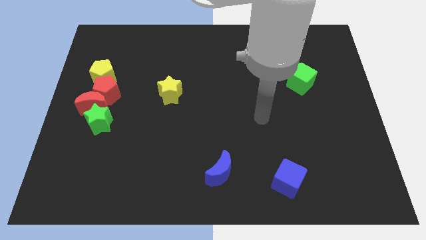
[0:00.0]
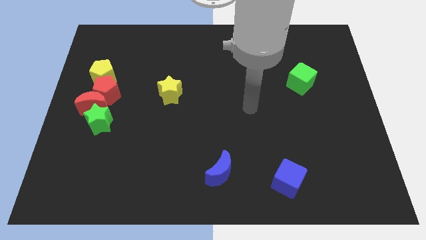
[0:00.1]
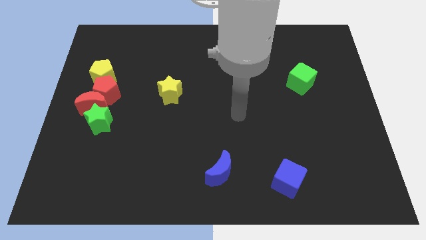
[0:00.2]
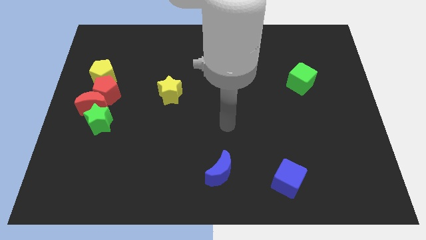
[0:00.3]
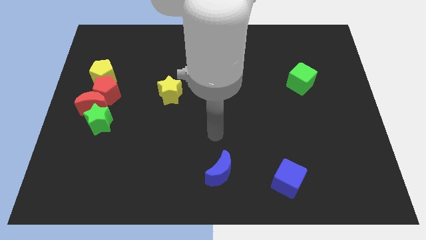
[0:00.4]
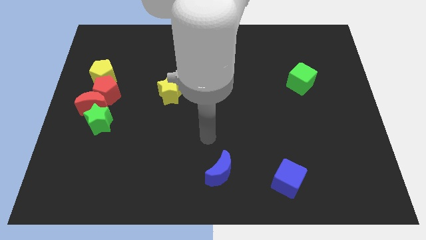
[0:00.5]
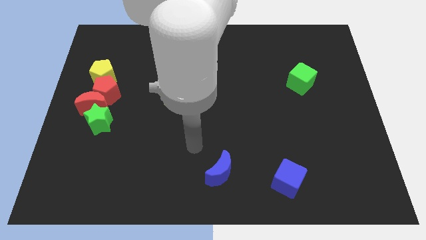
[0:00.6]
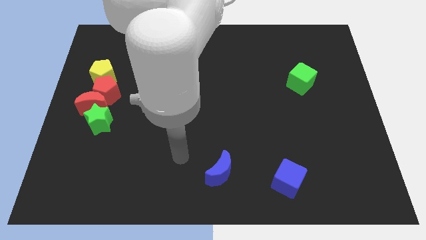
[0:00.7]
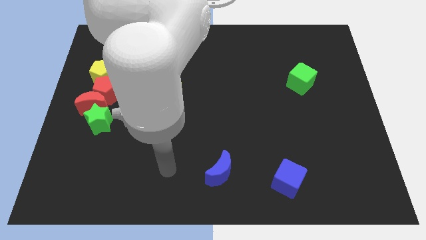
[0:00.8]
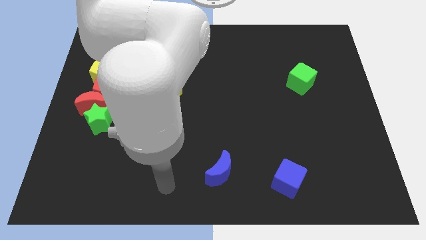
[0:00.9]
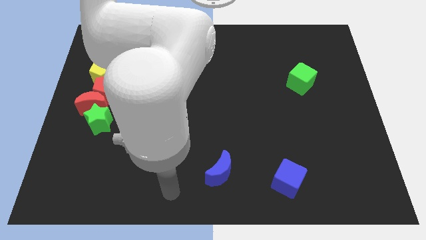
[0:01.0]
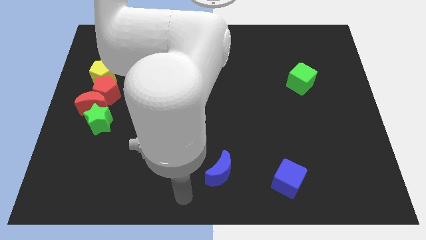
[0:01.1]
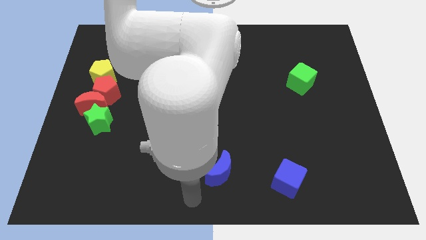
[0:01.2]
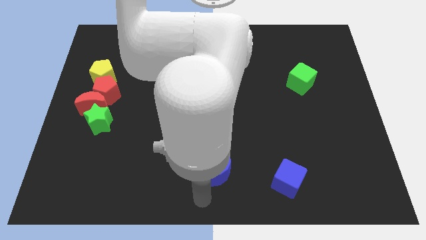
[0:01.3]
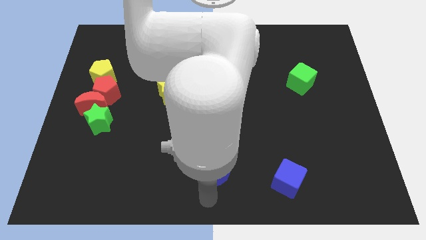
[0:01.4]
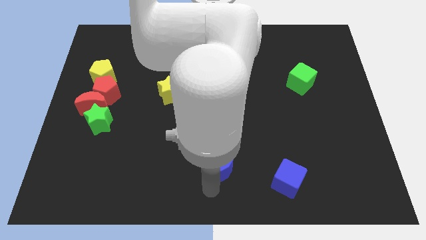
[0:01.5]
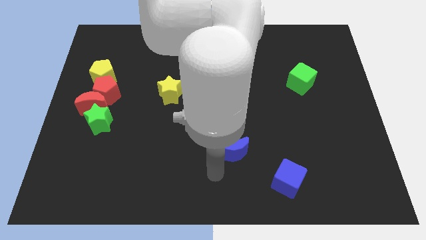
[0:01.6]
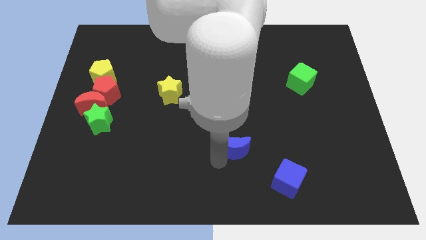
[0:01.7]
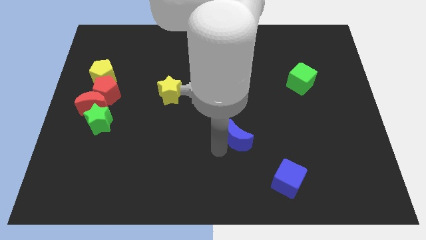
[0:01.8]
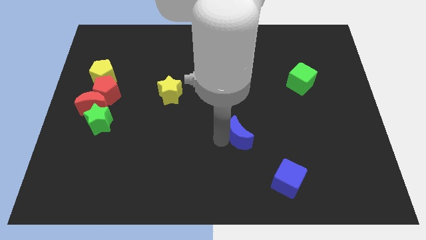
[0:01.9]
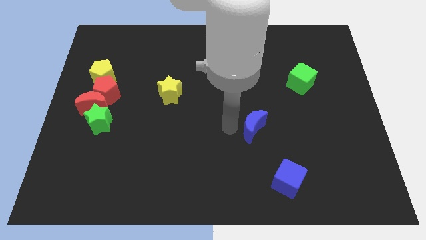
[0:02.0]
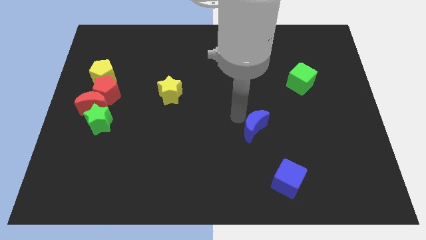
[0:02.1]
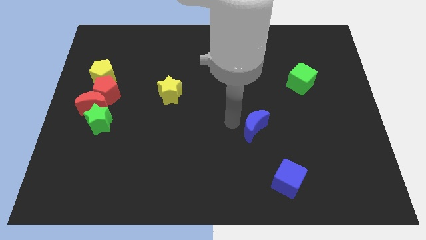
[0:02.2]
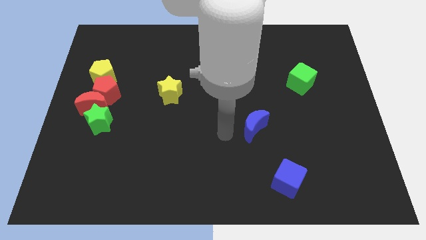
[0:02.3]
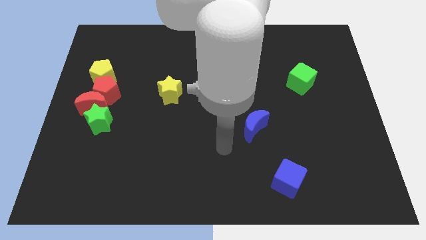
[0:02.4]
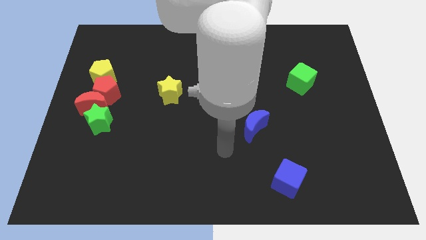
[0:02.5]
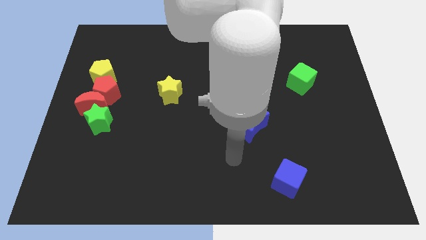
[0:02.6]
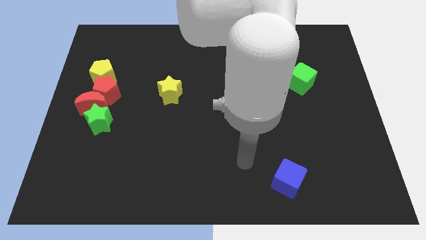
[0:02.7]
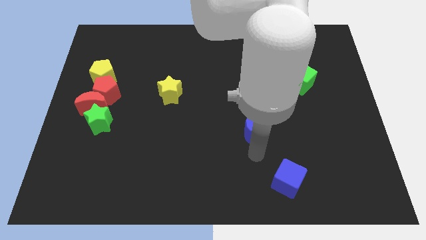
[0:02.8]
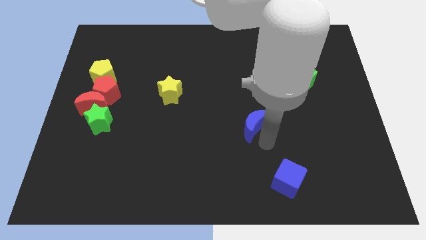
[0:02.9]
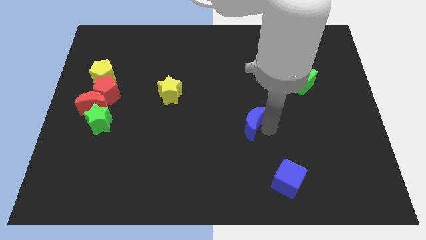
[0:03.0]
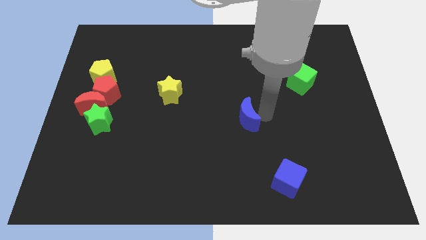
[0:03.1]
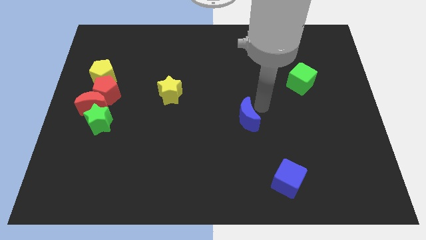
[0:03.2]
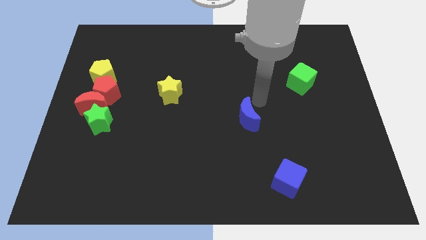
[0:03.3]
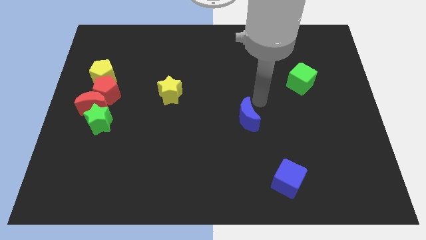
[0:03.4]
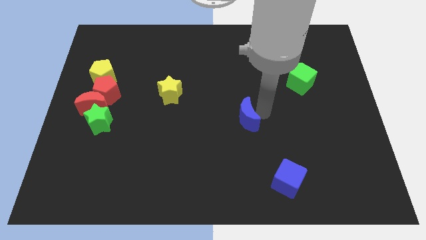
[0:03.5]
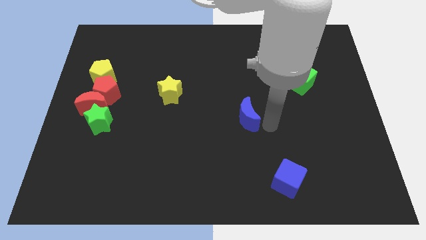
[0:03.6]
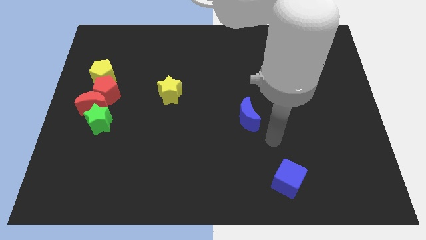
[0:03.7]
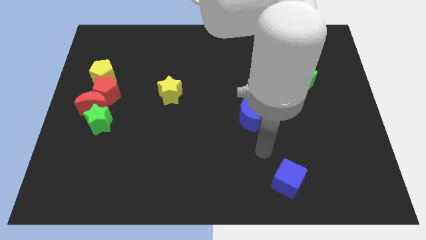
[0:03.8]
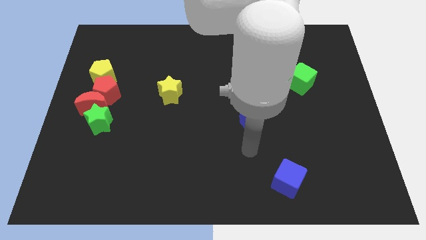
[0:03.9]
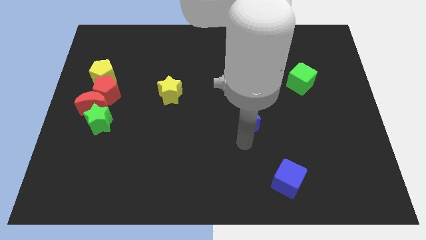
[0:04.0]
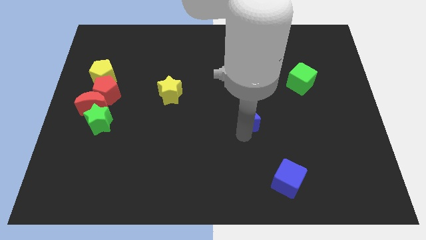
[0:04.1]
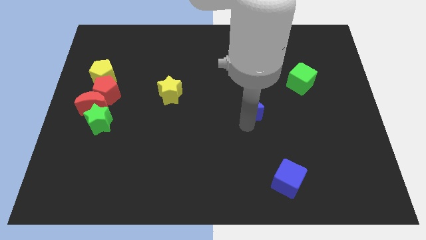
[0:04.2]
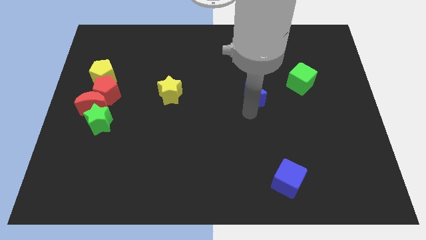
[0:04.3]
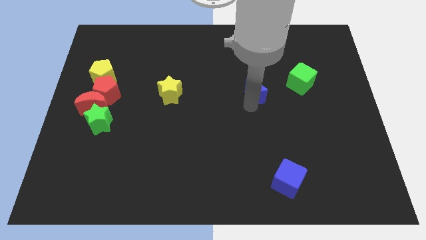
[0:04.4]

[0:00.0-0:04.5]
move blue moon to top

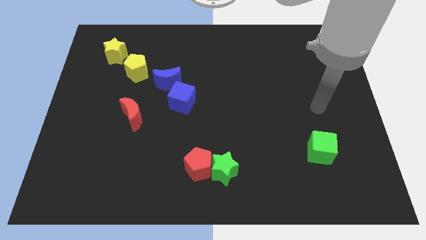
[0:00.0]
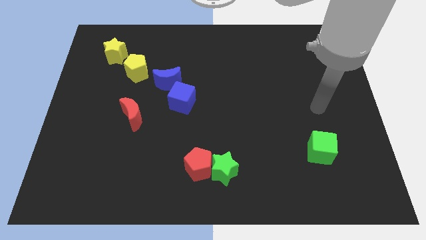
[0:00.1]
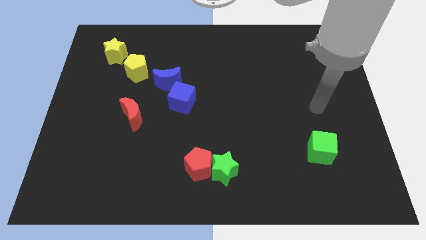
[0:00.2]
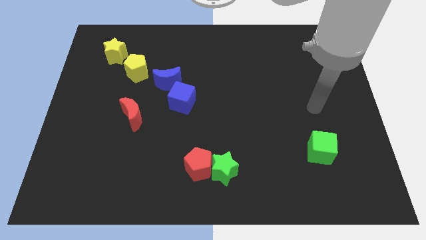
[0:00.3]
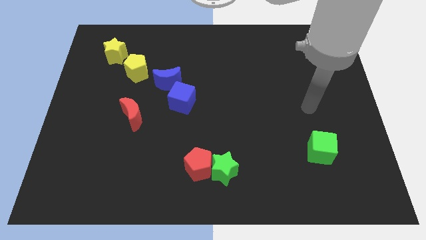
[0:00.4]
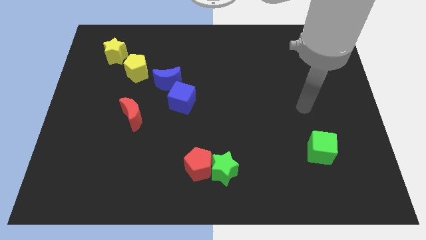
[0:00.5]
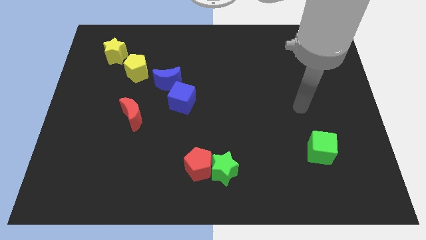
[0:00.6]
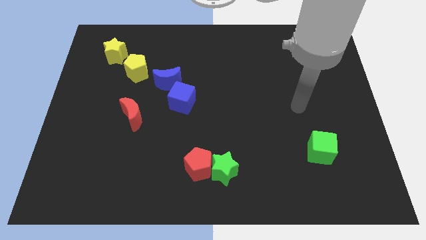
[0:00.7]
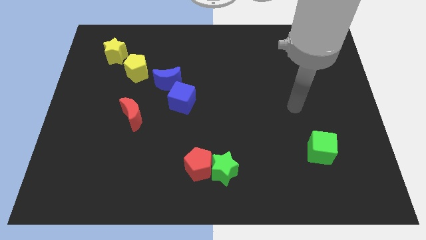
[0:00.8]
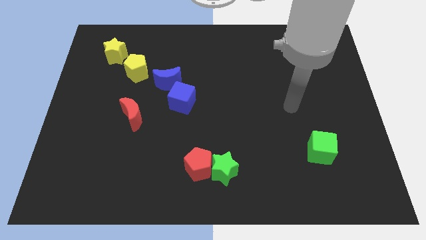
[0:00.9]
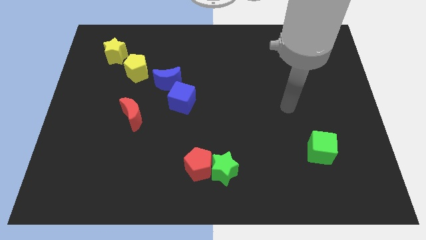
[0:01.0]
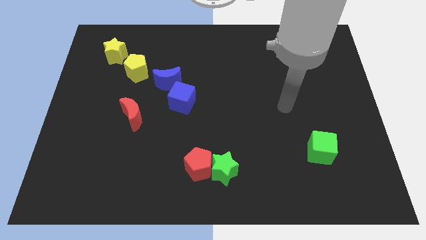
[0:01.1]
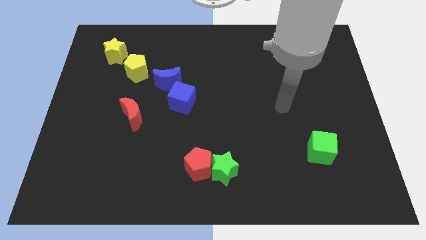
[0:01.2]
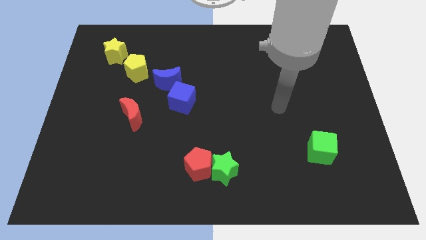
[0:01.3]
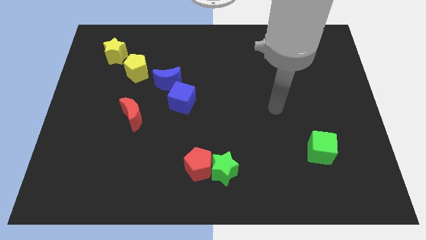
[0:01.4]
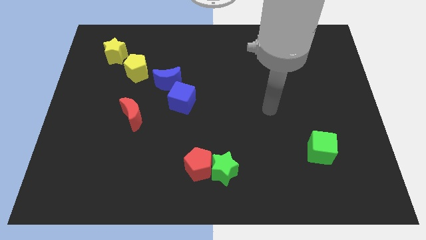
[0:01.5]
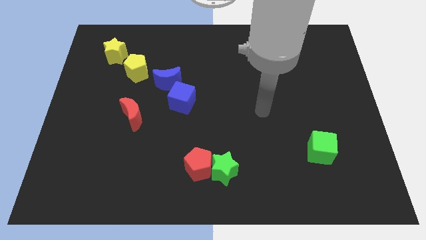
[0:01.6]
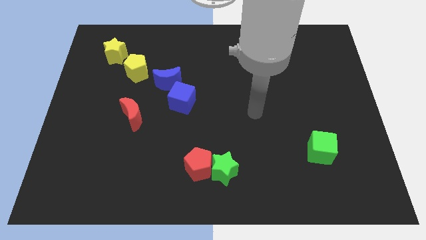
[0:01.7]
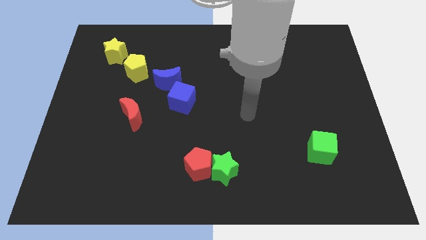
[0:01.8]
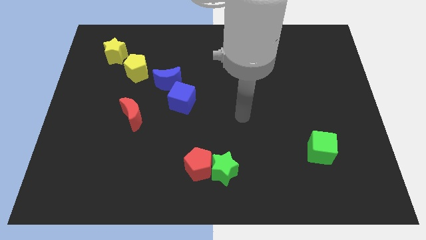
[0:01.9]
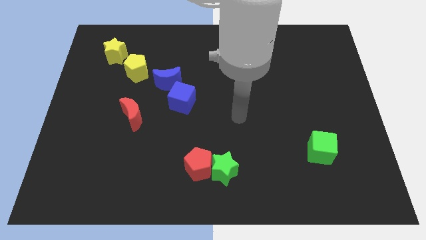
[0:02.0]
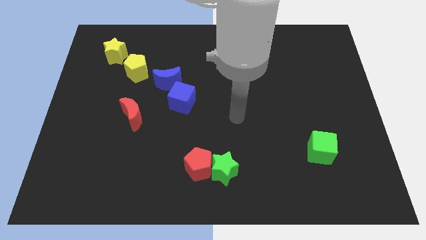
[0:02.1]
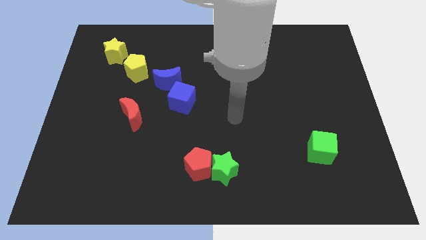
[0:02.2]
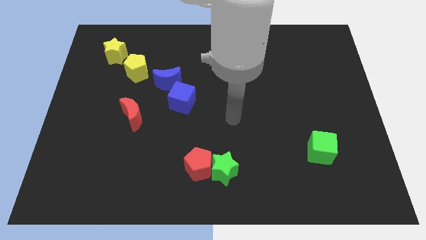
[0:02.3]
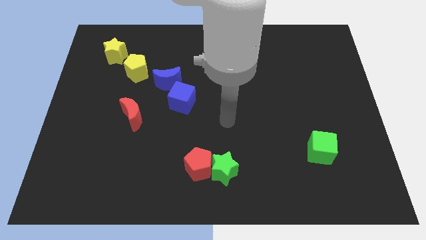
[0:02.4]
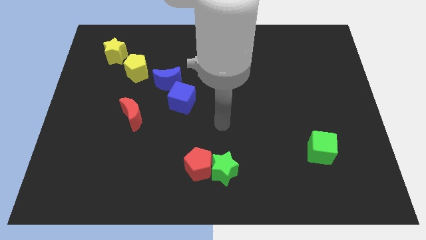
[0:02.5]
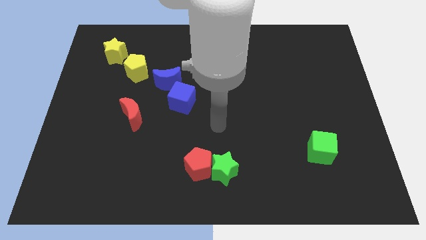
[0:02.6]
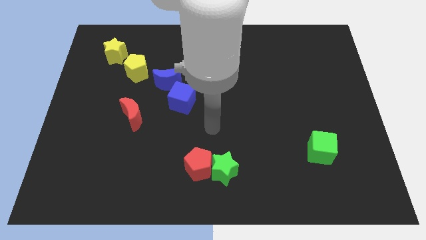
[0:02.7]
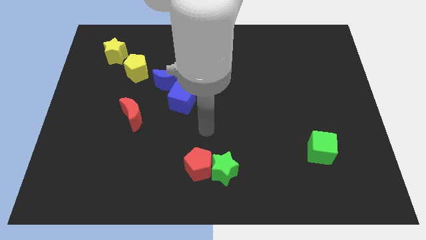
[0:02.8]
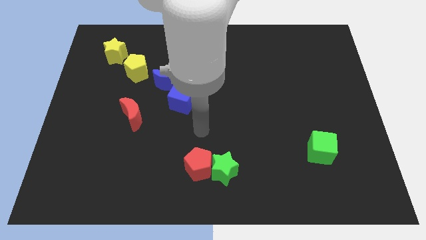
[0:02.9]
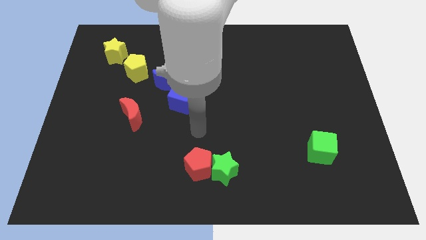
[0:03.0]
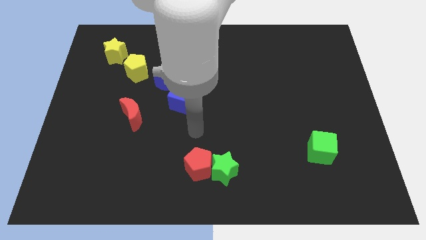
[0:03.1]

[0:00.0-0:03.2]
move your arm towards the blue cube

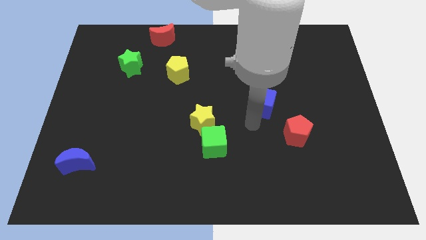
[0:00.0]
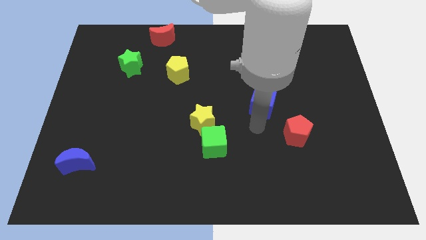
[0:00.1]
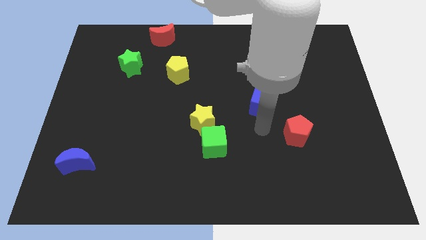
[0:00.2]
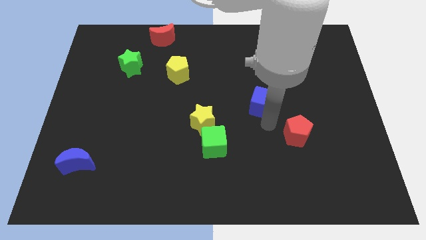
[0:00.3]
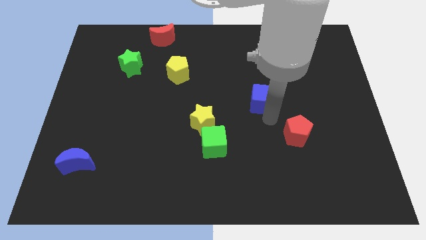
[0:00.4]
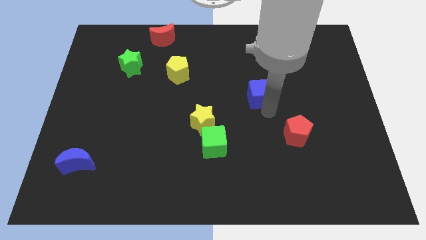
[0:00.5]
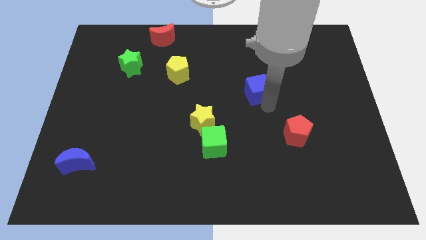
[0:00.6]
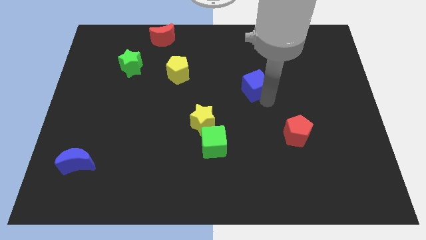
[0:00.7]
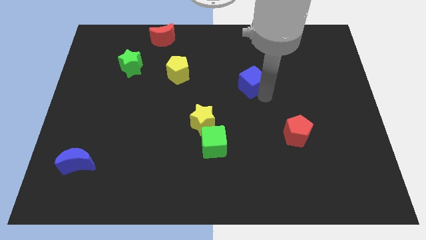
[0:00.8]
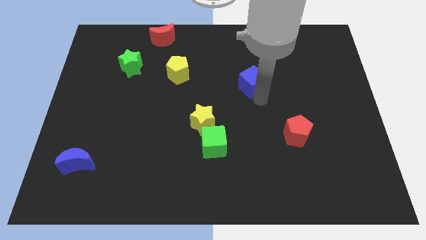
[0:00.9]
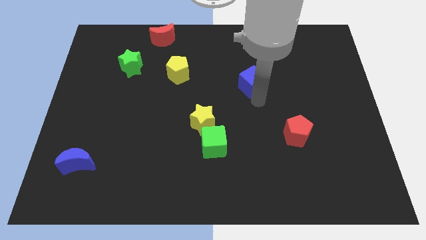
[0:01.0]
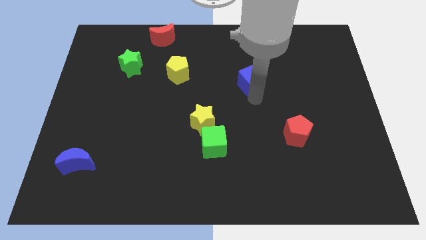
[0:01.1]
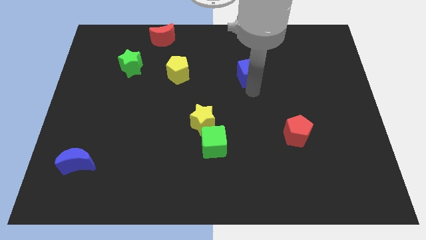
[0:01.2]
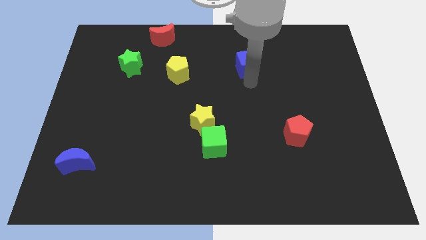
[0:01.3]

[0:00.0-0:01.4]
move the blue cube to right of yellow pentagon
